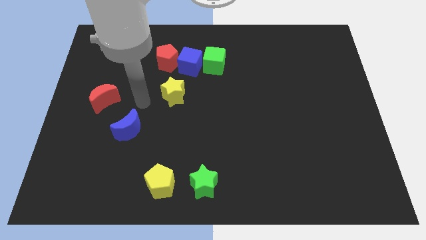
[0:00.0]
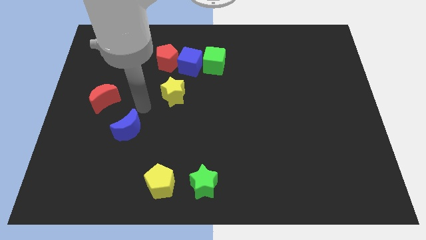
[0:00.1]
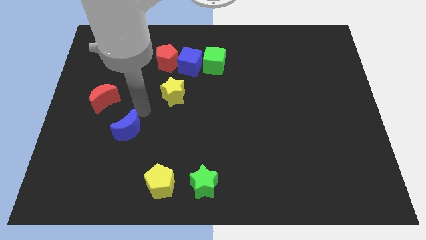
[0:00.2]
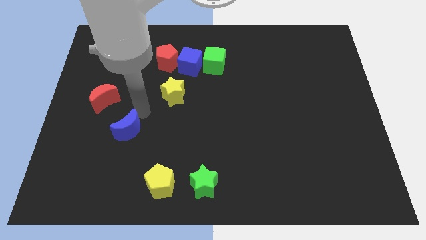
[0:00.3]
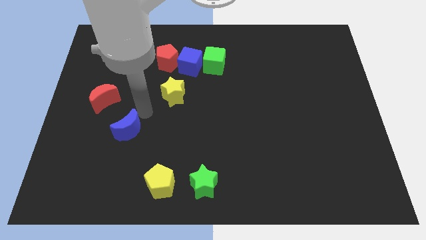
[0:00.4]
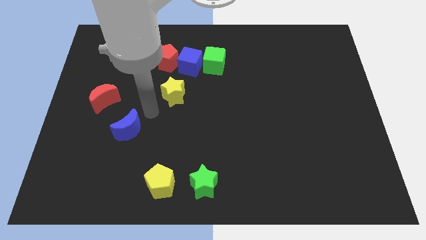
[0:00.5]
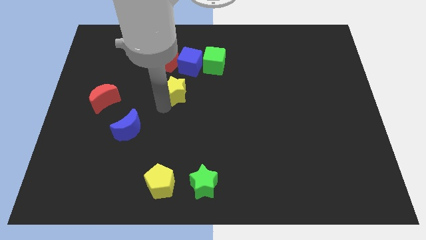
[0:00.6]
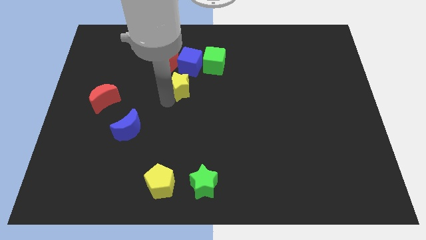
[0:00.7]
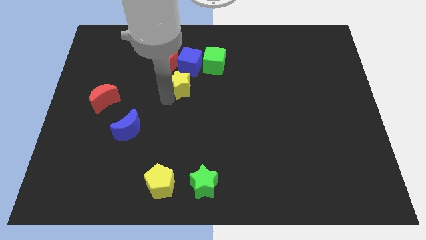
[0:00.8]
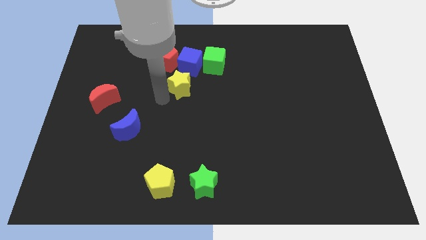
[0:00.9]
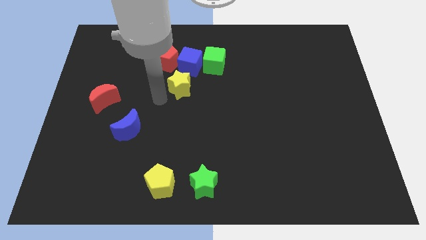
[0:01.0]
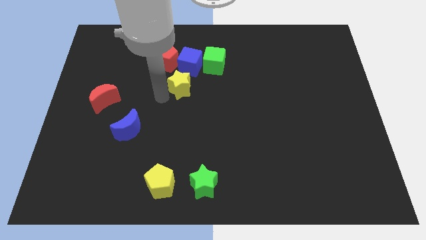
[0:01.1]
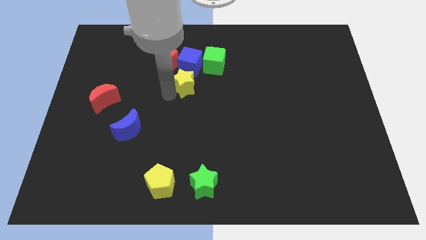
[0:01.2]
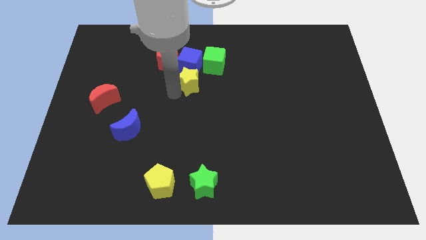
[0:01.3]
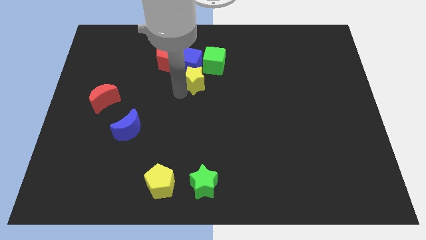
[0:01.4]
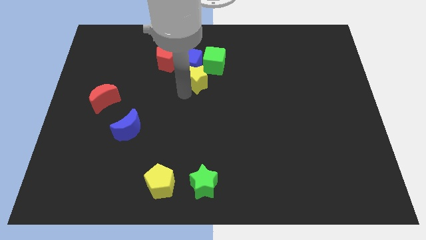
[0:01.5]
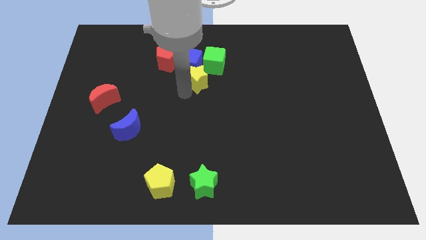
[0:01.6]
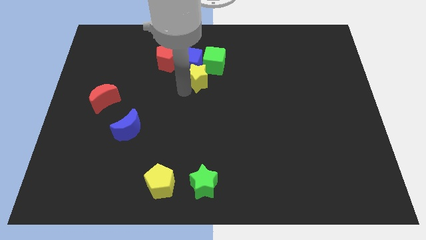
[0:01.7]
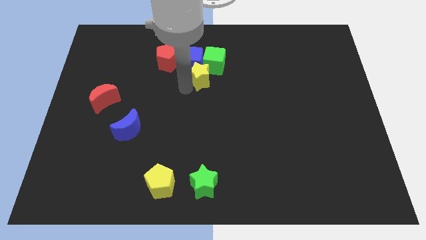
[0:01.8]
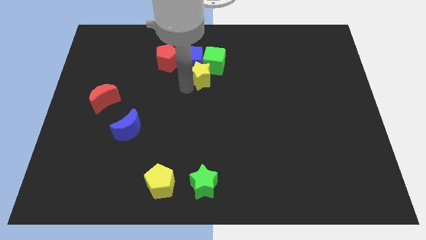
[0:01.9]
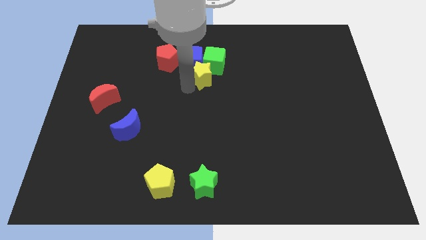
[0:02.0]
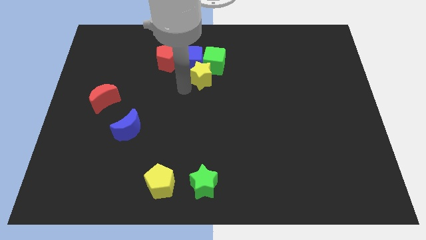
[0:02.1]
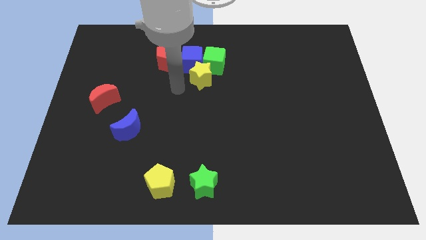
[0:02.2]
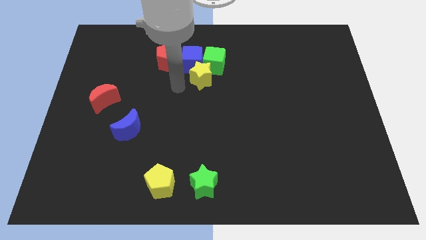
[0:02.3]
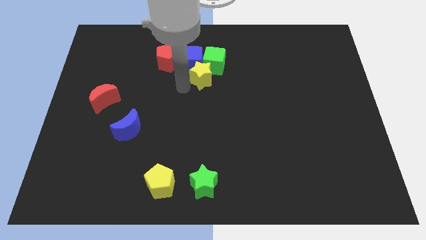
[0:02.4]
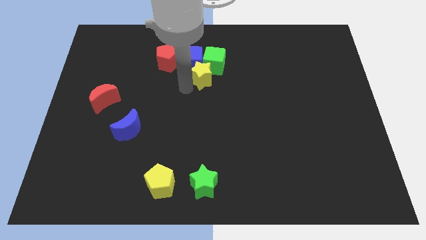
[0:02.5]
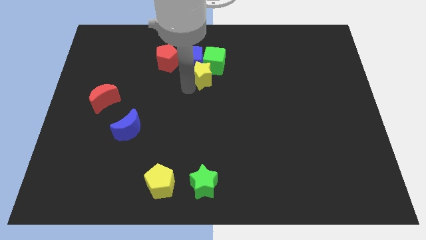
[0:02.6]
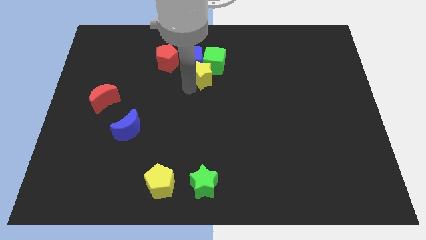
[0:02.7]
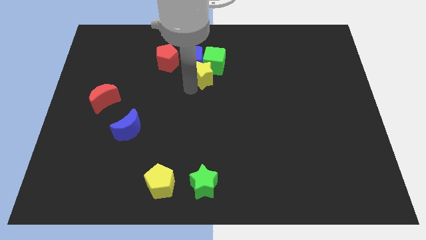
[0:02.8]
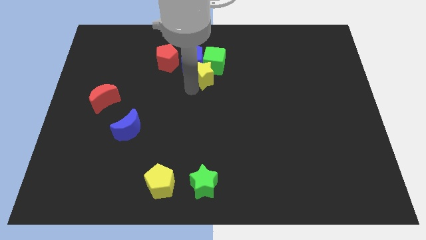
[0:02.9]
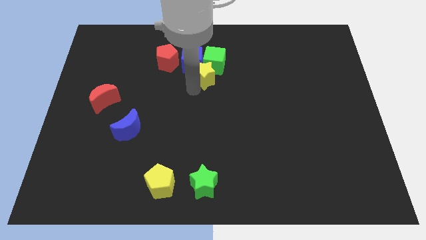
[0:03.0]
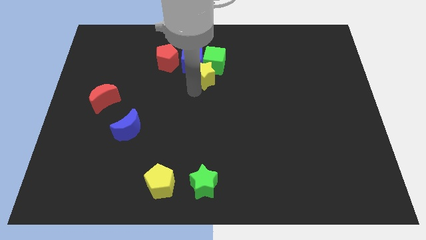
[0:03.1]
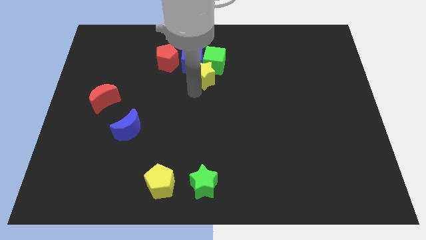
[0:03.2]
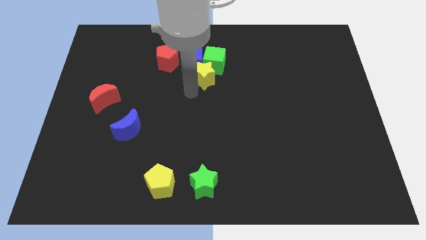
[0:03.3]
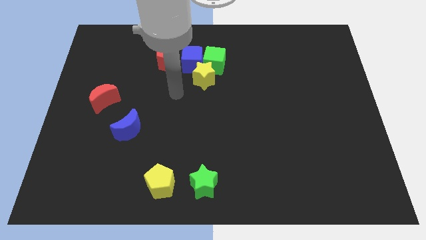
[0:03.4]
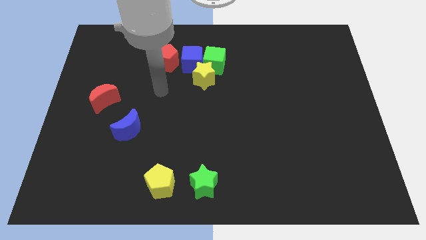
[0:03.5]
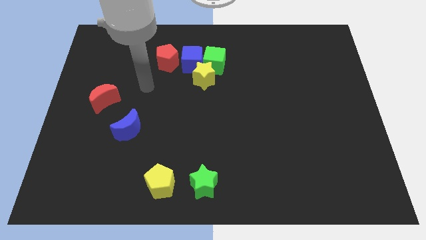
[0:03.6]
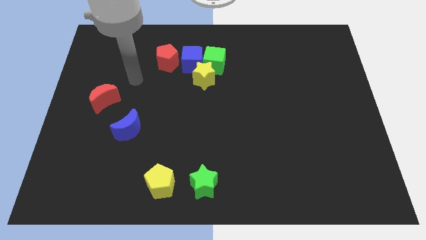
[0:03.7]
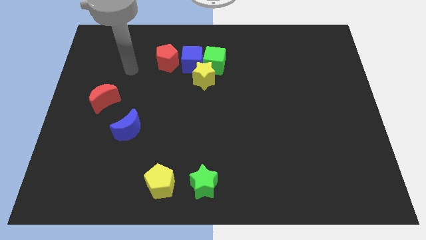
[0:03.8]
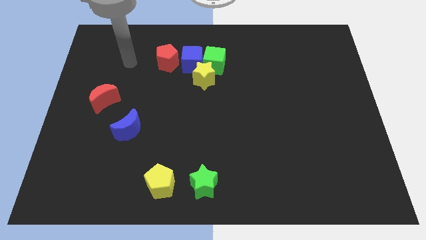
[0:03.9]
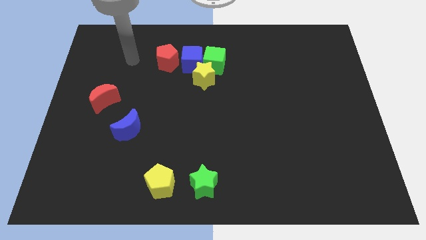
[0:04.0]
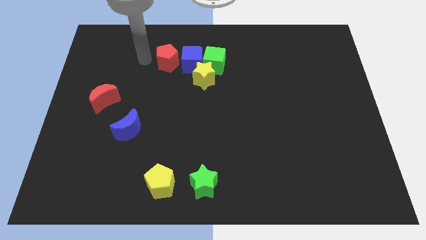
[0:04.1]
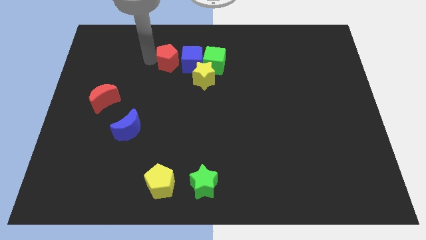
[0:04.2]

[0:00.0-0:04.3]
place the yellow star to the bottom of the green cube

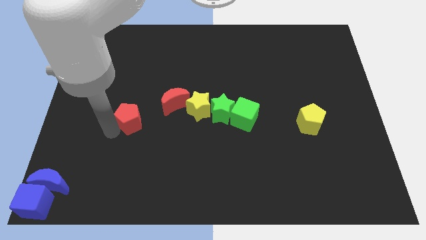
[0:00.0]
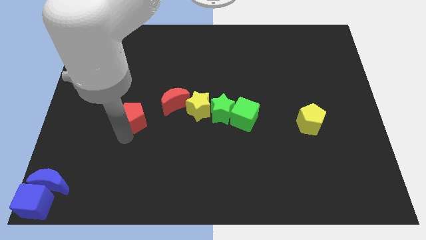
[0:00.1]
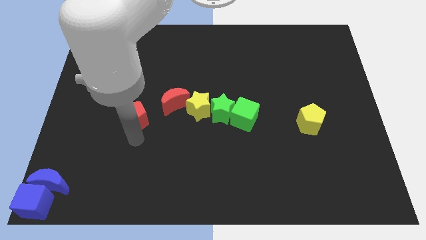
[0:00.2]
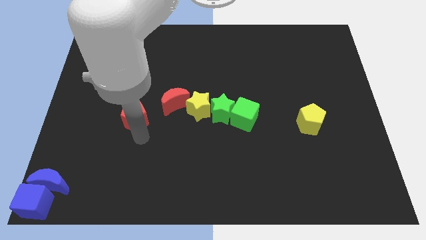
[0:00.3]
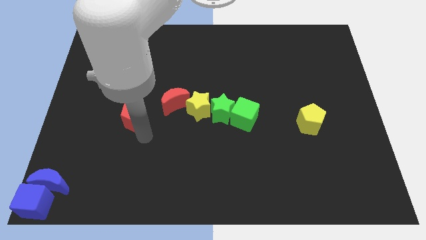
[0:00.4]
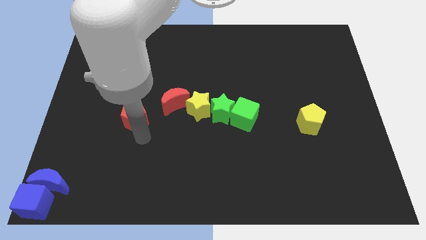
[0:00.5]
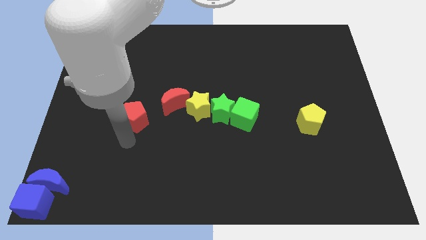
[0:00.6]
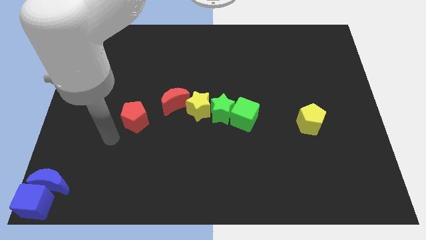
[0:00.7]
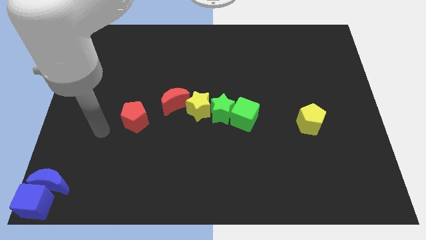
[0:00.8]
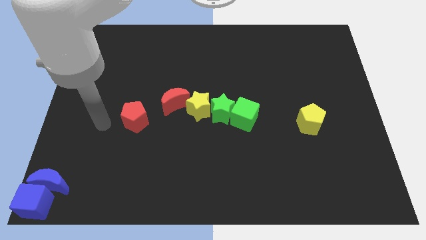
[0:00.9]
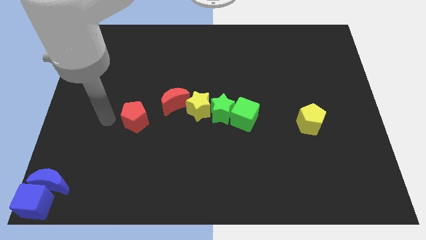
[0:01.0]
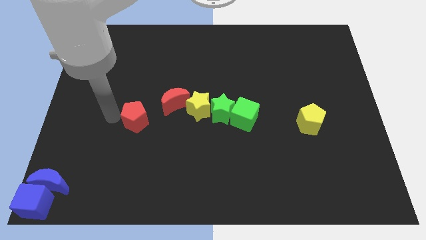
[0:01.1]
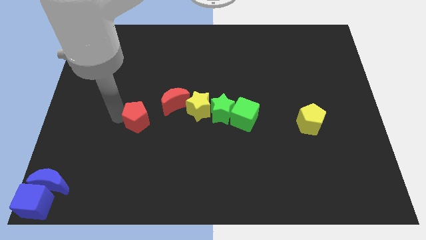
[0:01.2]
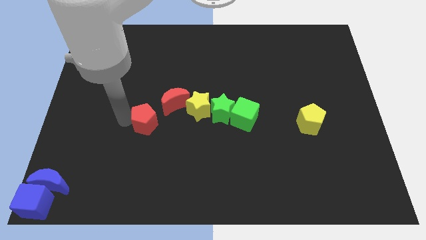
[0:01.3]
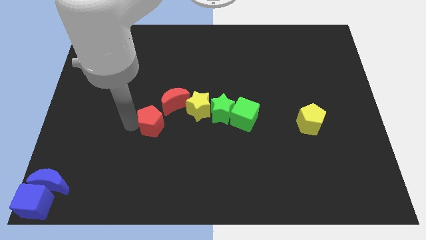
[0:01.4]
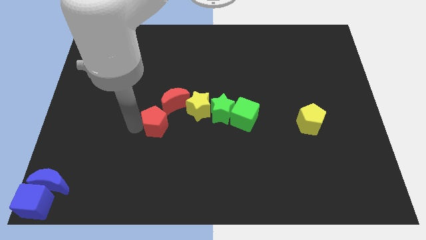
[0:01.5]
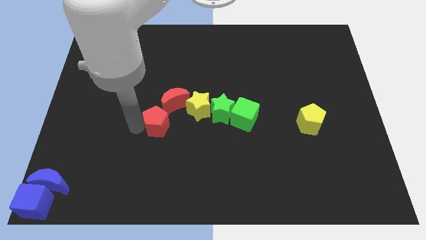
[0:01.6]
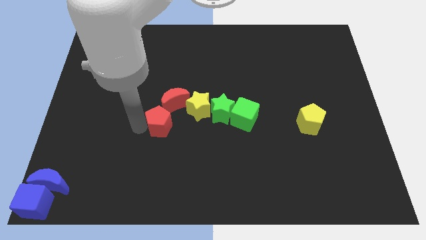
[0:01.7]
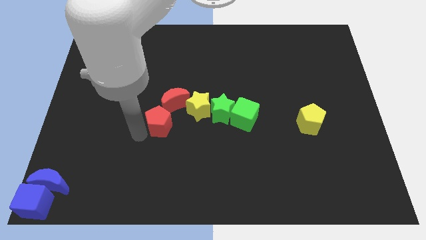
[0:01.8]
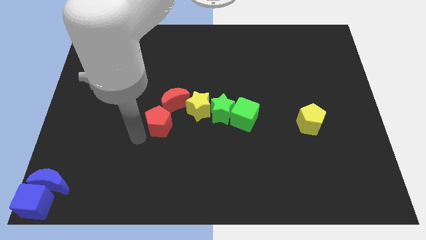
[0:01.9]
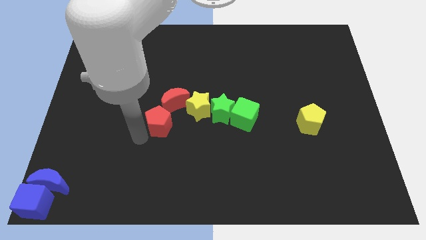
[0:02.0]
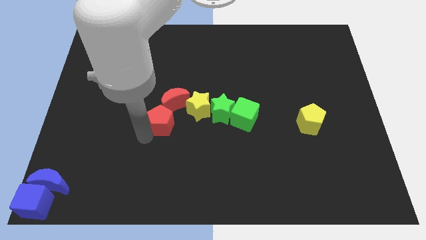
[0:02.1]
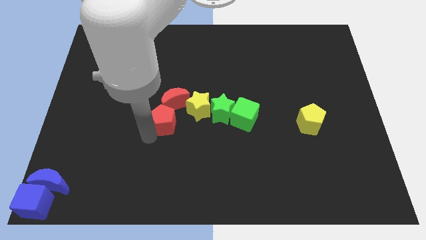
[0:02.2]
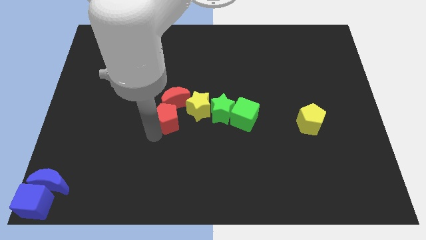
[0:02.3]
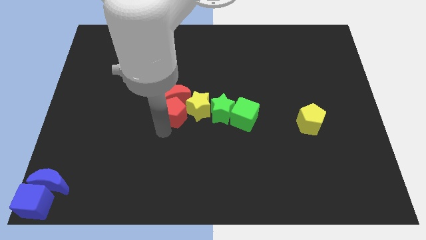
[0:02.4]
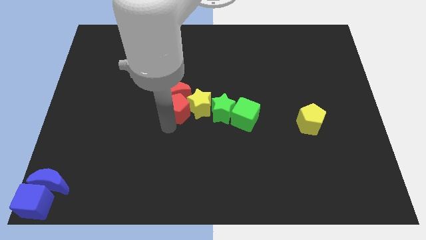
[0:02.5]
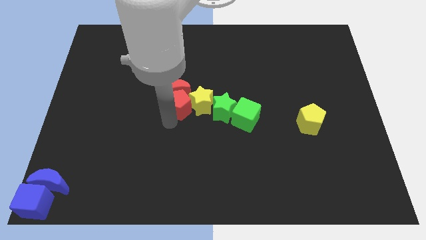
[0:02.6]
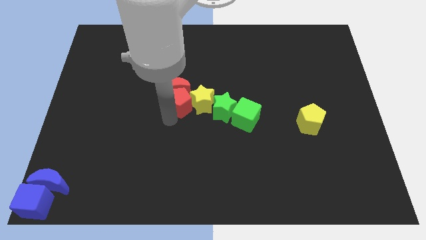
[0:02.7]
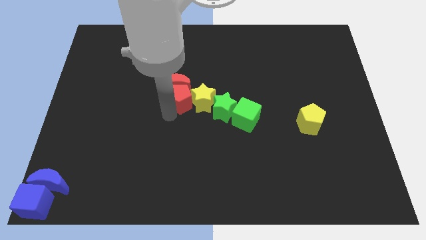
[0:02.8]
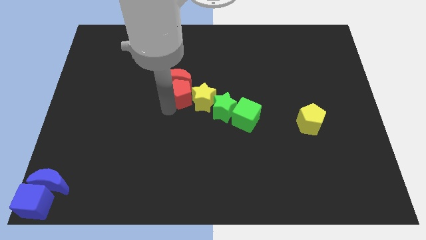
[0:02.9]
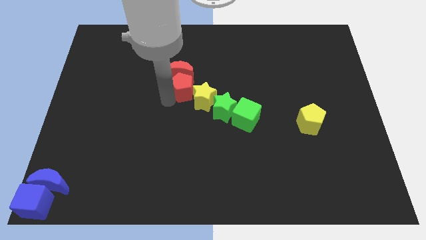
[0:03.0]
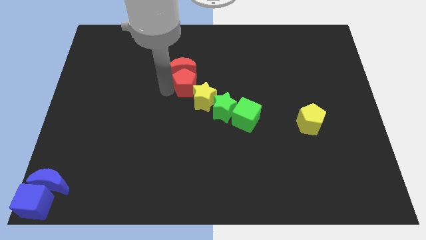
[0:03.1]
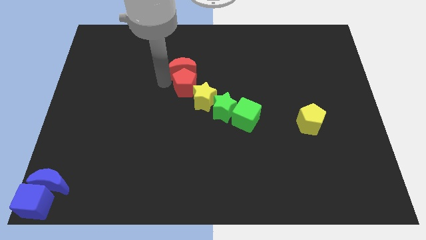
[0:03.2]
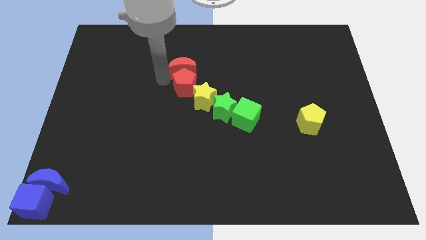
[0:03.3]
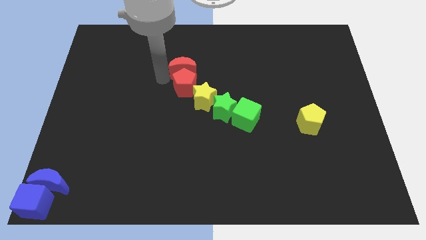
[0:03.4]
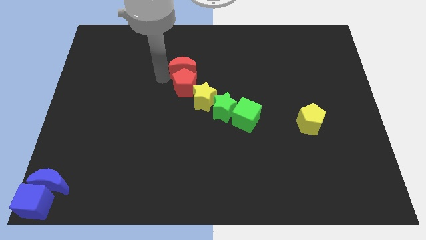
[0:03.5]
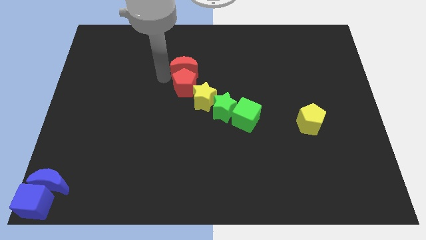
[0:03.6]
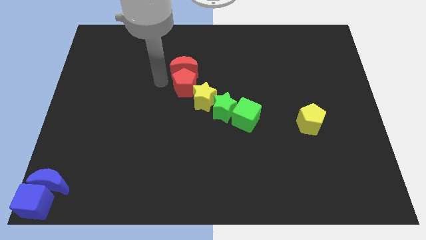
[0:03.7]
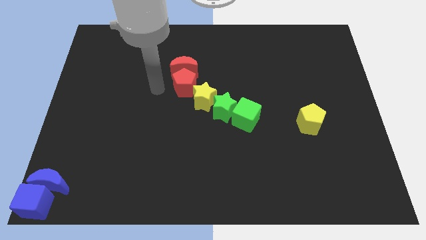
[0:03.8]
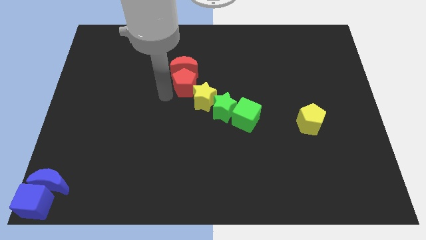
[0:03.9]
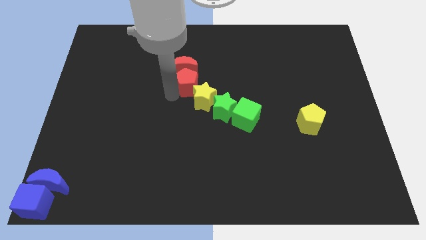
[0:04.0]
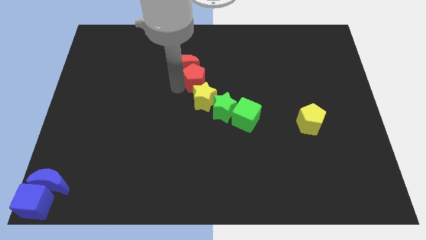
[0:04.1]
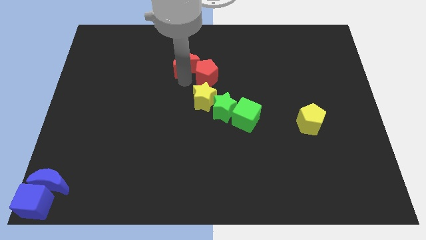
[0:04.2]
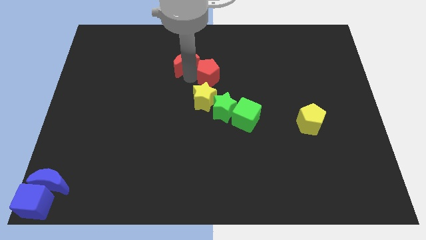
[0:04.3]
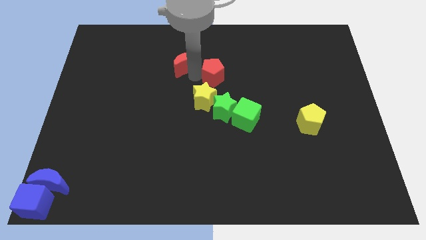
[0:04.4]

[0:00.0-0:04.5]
place the red pentagon in between the yellow star and the red moon

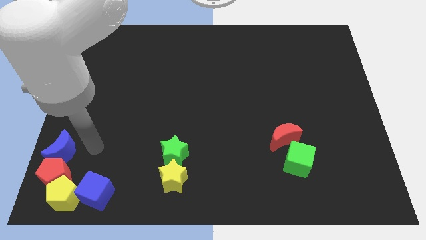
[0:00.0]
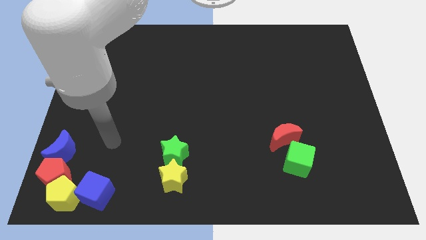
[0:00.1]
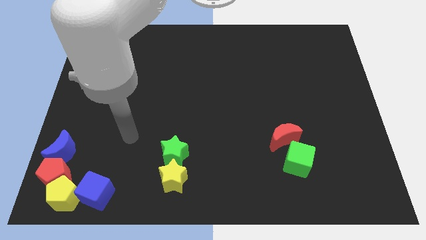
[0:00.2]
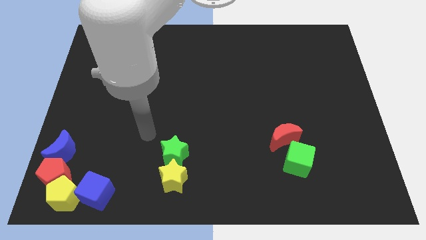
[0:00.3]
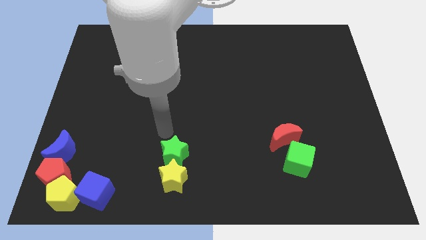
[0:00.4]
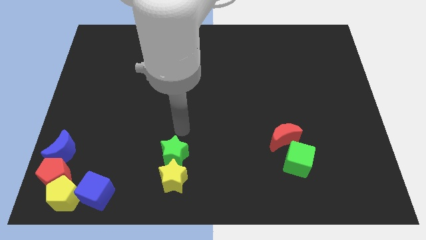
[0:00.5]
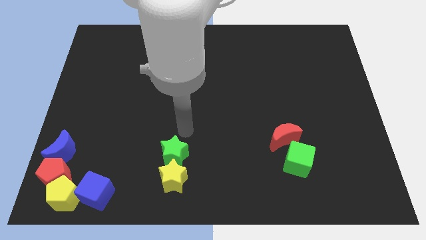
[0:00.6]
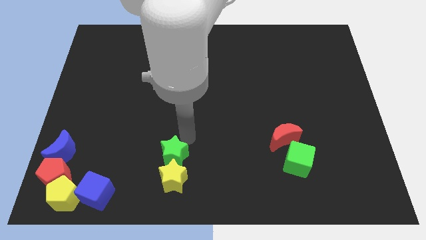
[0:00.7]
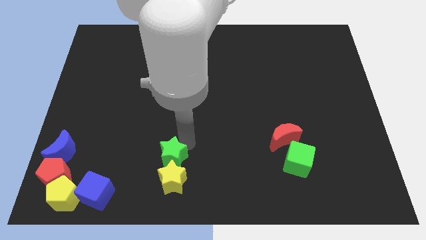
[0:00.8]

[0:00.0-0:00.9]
tap green star on top
